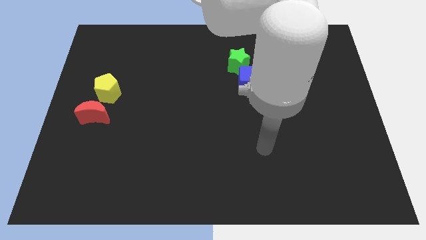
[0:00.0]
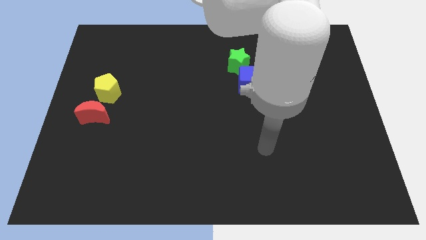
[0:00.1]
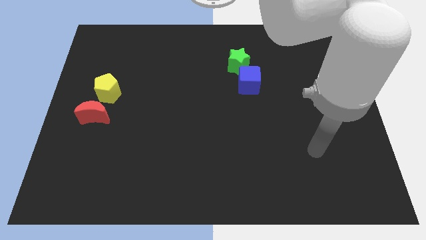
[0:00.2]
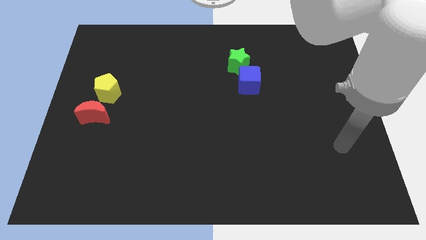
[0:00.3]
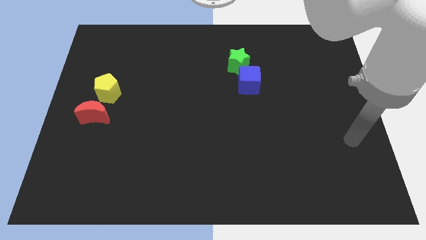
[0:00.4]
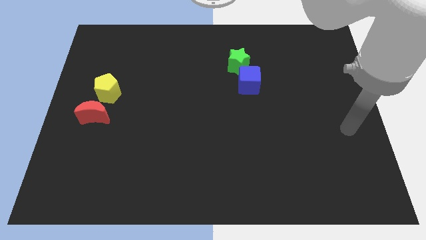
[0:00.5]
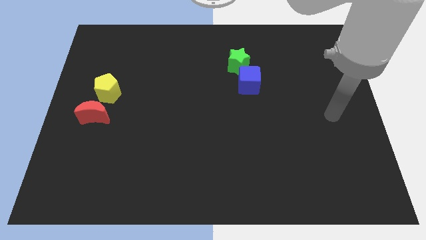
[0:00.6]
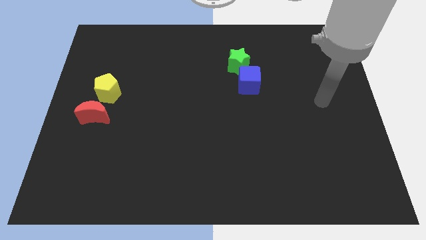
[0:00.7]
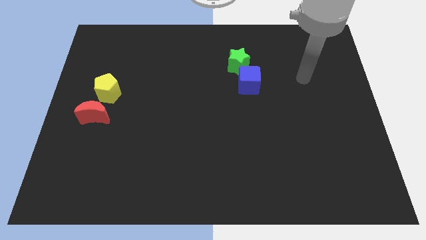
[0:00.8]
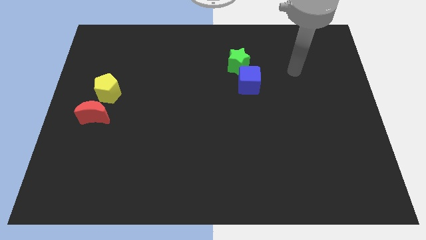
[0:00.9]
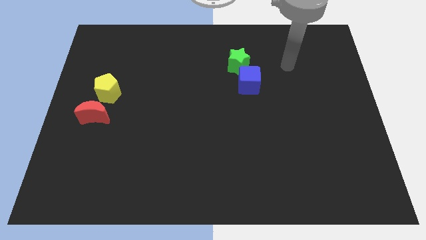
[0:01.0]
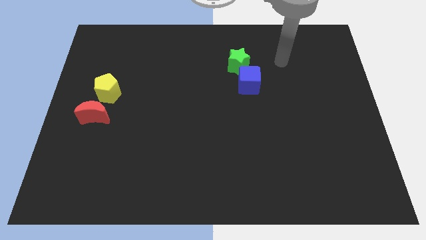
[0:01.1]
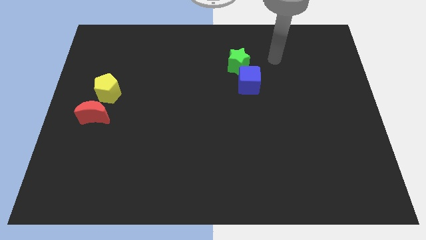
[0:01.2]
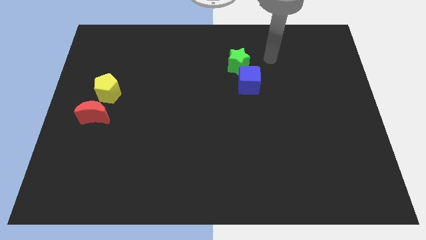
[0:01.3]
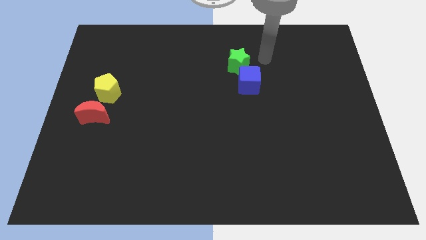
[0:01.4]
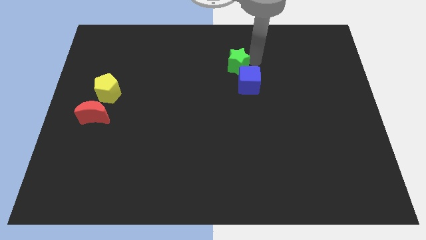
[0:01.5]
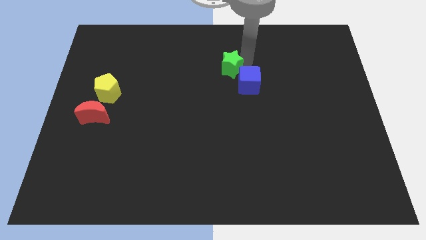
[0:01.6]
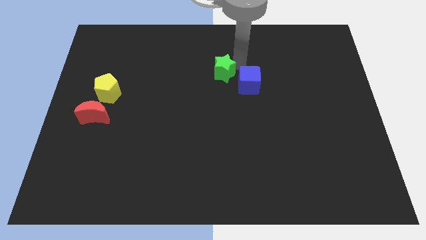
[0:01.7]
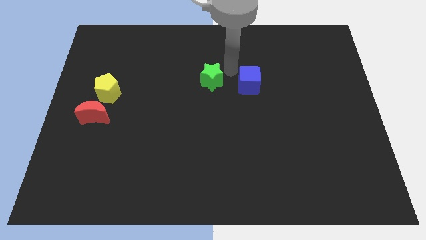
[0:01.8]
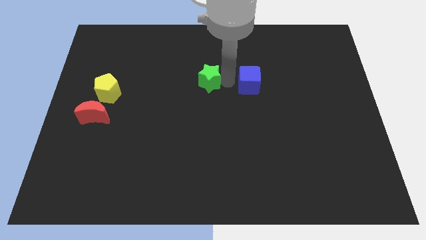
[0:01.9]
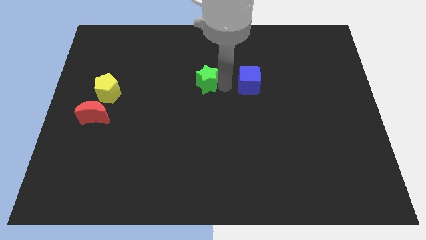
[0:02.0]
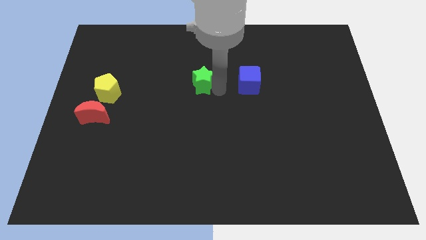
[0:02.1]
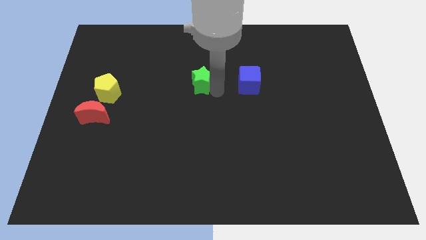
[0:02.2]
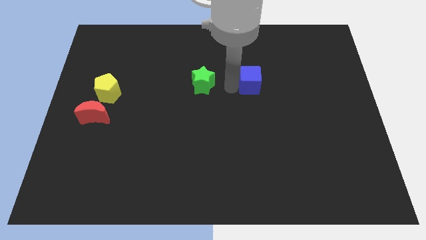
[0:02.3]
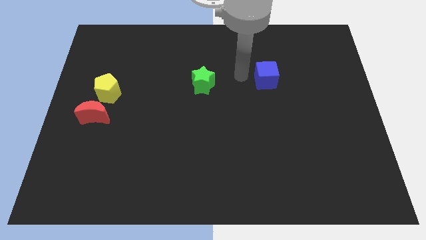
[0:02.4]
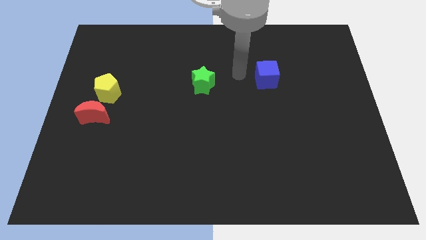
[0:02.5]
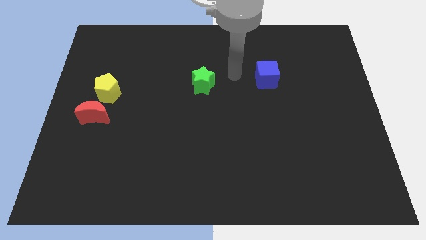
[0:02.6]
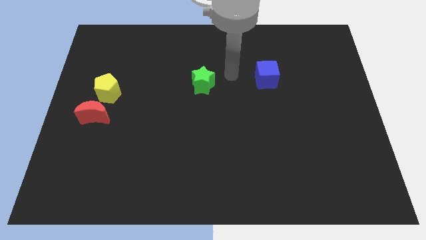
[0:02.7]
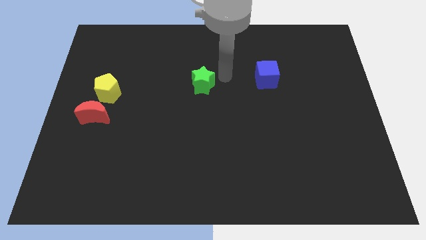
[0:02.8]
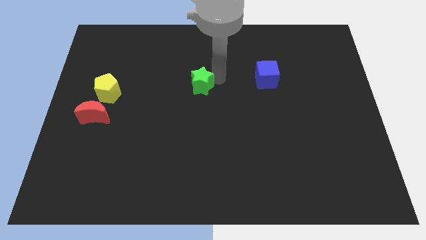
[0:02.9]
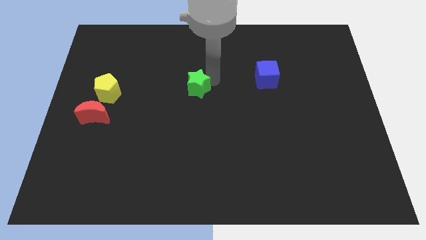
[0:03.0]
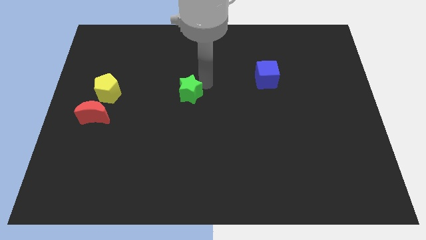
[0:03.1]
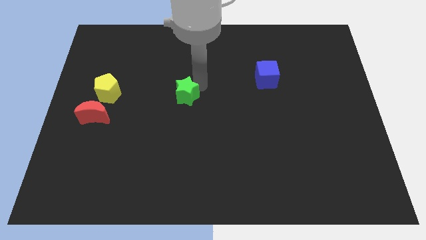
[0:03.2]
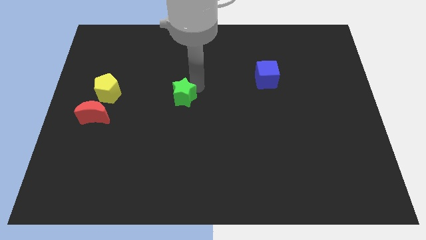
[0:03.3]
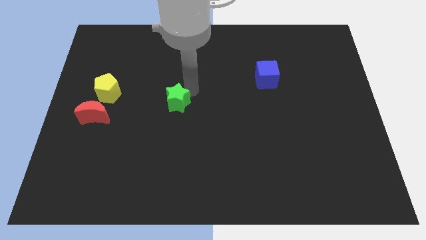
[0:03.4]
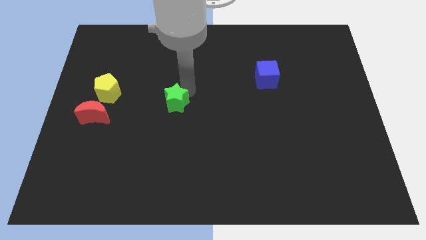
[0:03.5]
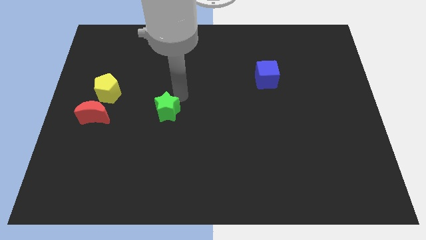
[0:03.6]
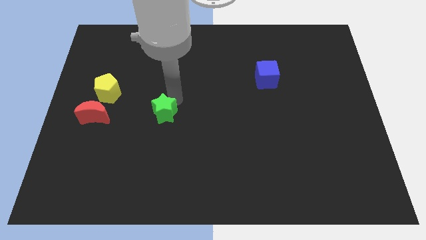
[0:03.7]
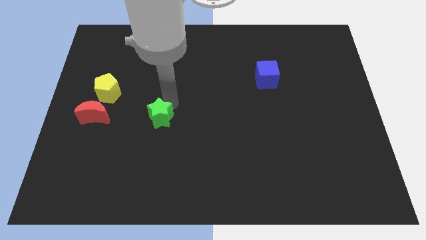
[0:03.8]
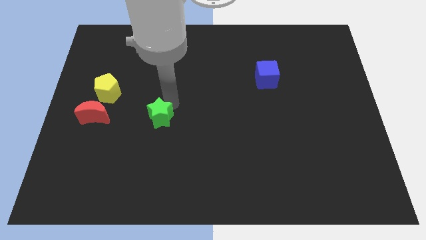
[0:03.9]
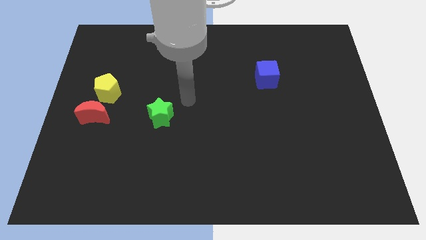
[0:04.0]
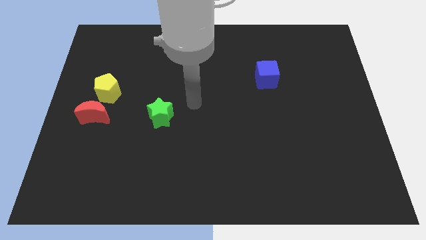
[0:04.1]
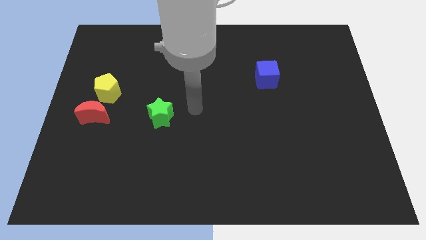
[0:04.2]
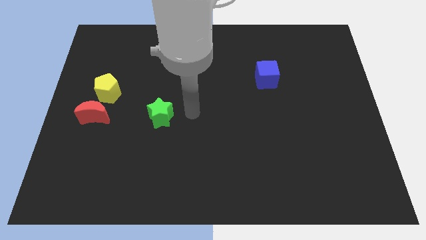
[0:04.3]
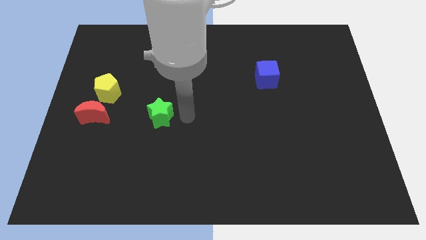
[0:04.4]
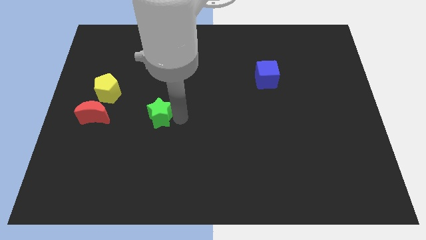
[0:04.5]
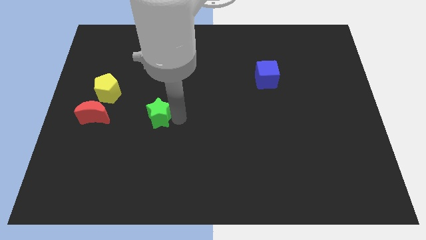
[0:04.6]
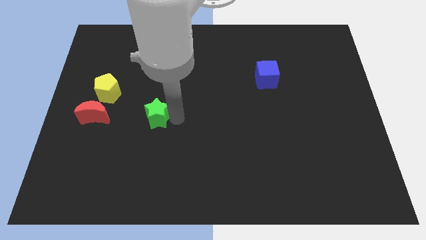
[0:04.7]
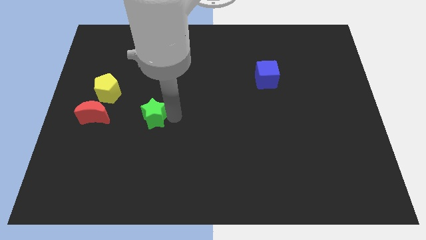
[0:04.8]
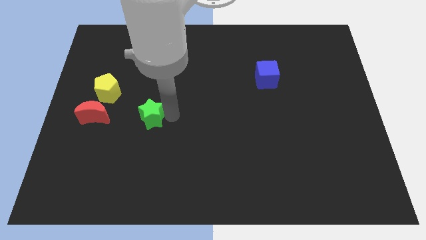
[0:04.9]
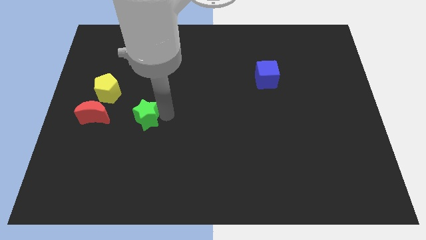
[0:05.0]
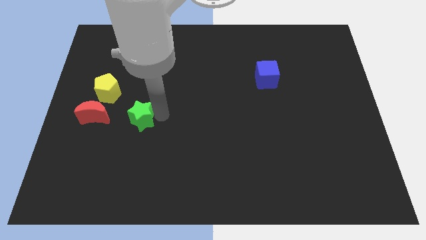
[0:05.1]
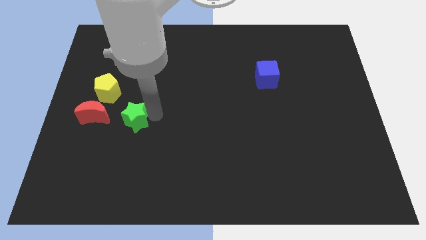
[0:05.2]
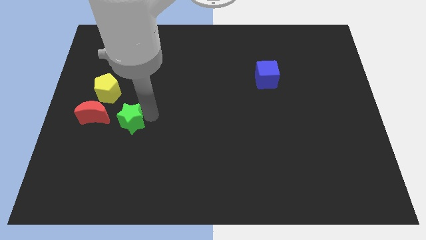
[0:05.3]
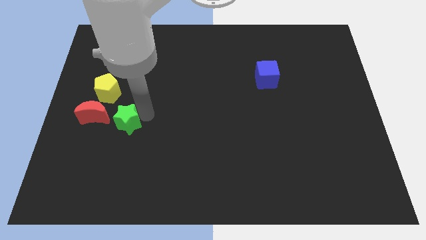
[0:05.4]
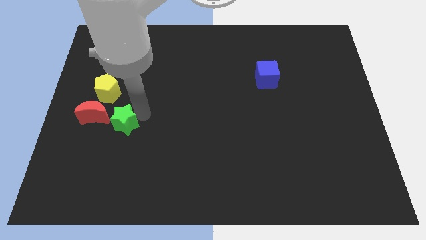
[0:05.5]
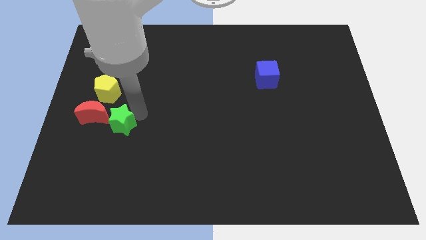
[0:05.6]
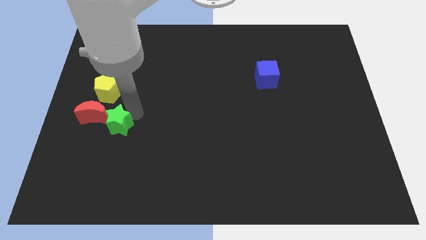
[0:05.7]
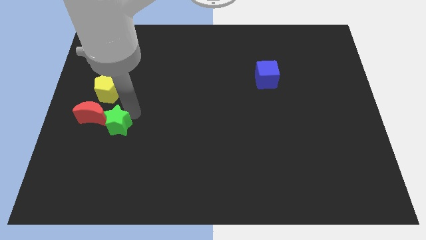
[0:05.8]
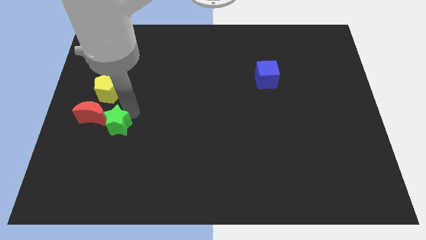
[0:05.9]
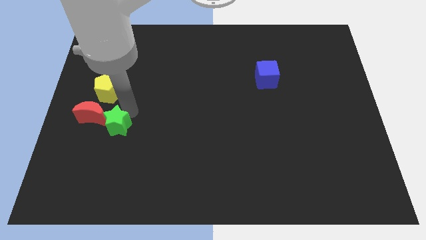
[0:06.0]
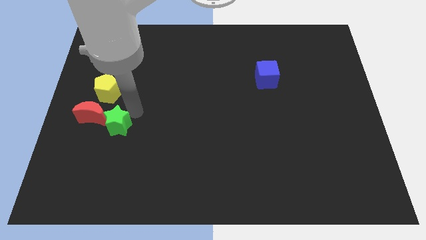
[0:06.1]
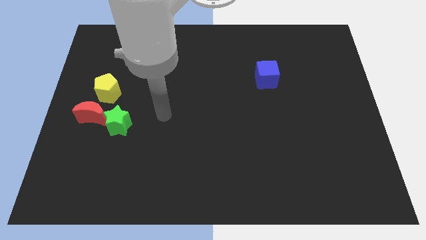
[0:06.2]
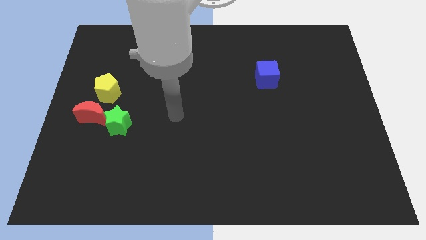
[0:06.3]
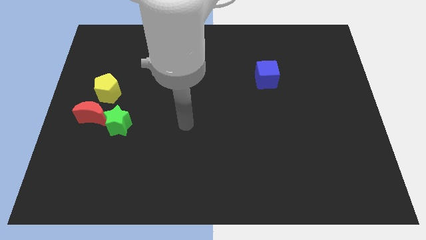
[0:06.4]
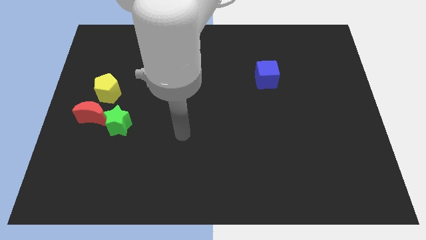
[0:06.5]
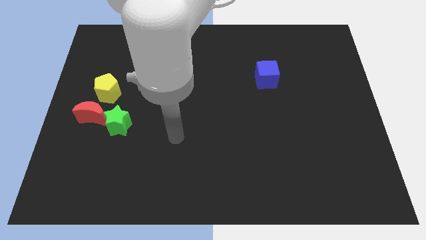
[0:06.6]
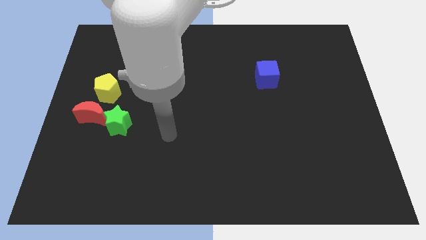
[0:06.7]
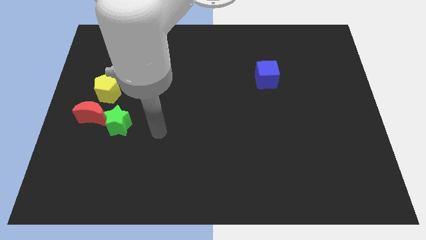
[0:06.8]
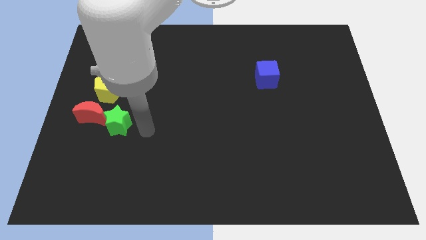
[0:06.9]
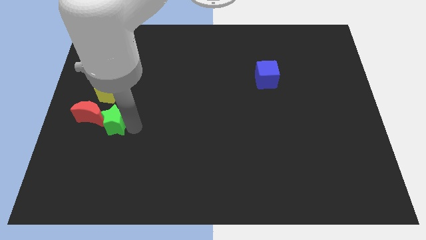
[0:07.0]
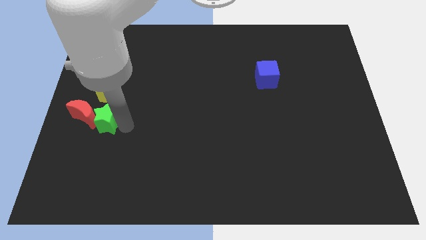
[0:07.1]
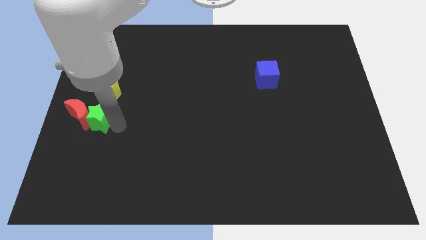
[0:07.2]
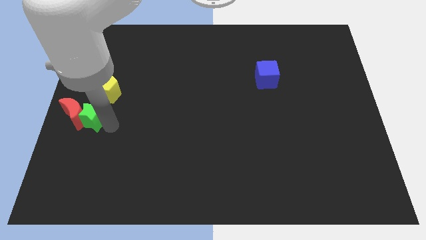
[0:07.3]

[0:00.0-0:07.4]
put the green star towards the red block

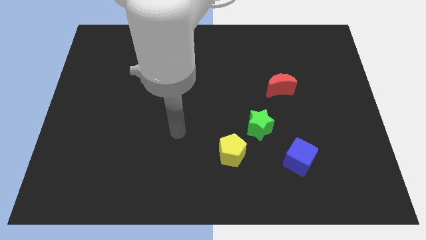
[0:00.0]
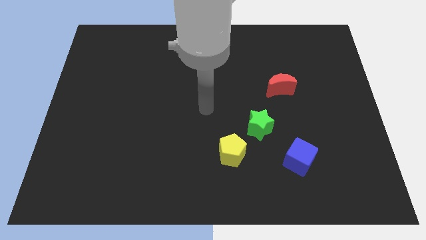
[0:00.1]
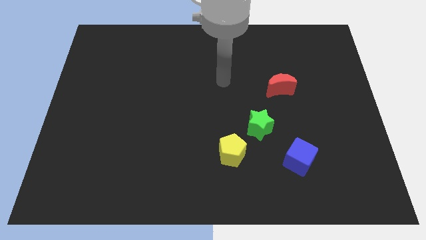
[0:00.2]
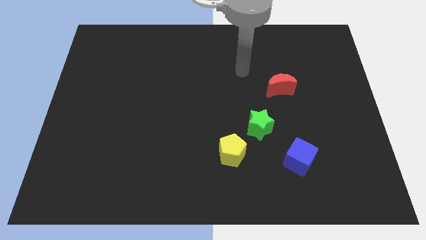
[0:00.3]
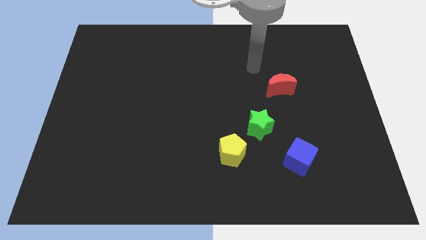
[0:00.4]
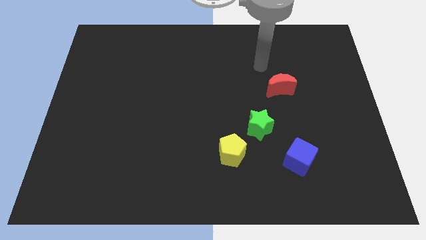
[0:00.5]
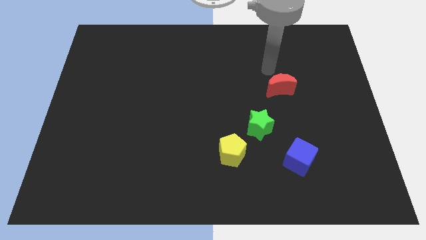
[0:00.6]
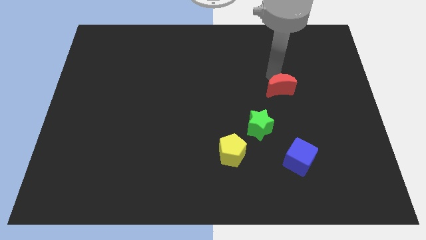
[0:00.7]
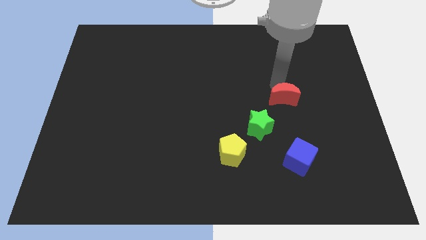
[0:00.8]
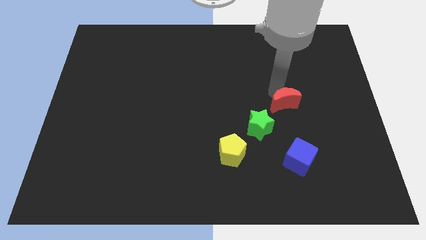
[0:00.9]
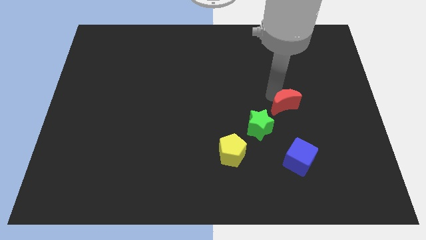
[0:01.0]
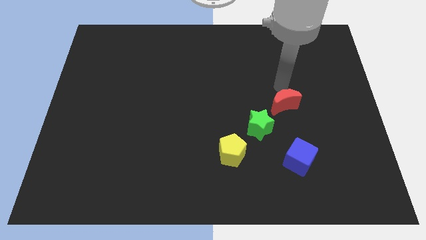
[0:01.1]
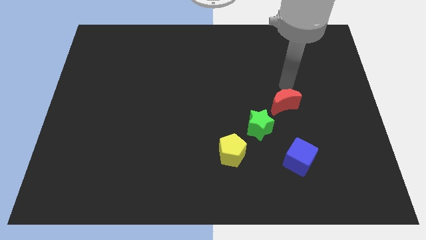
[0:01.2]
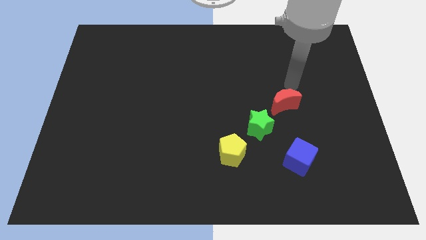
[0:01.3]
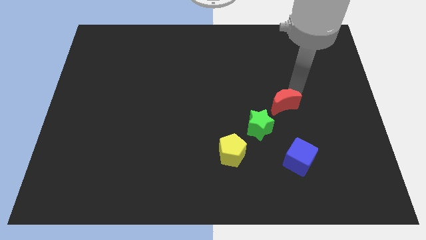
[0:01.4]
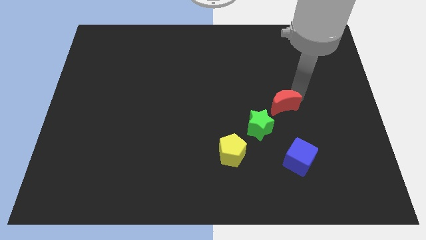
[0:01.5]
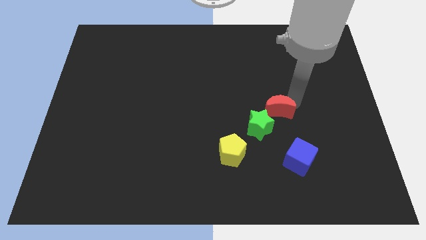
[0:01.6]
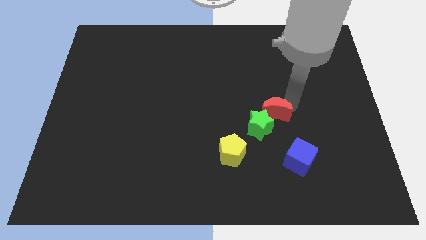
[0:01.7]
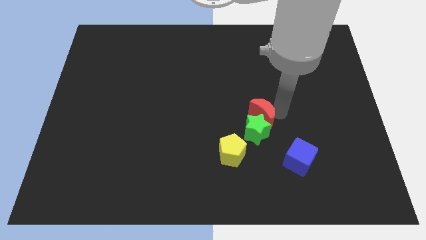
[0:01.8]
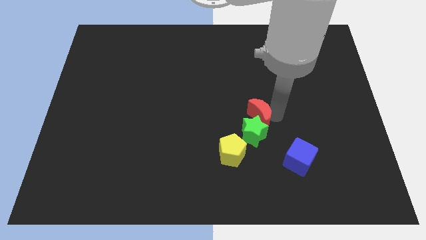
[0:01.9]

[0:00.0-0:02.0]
push the red block close to the green block
